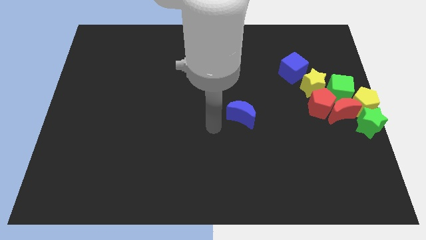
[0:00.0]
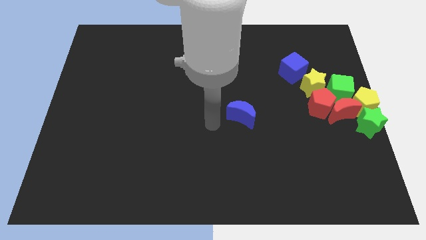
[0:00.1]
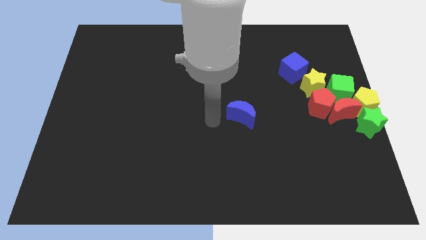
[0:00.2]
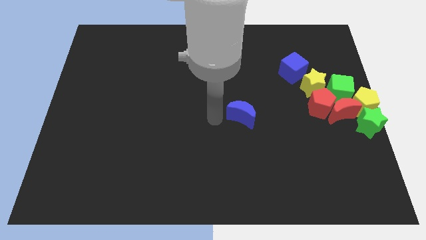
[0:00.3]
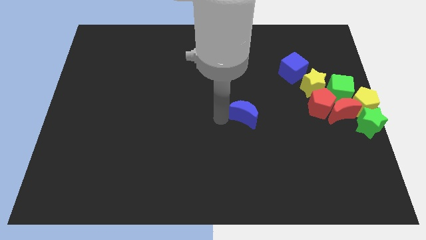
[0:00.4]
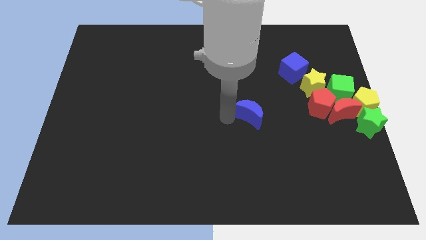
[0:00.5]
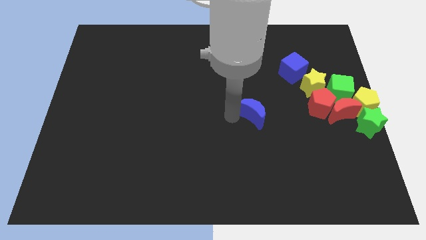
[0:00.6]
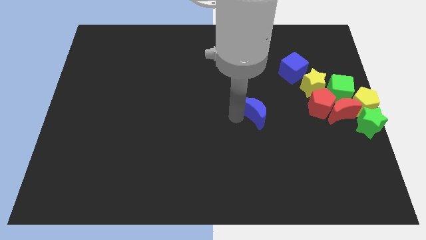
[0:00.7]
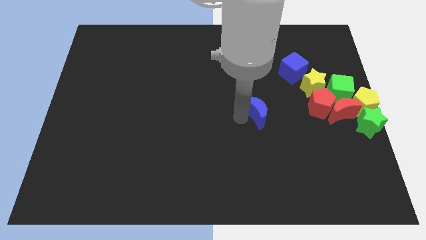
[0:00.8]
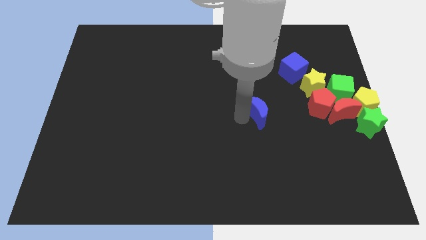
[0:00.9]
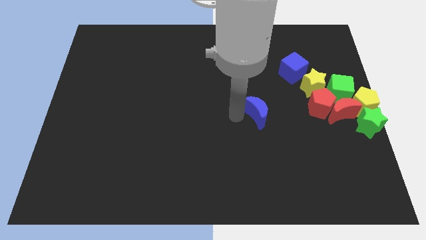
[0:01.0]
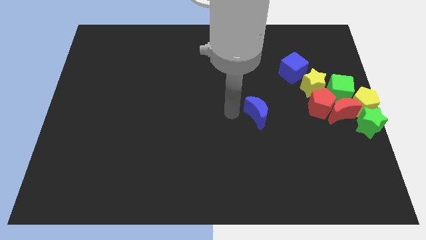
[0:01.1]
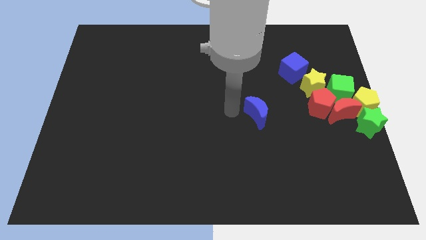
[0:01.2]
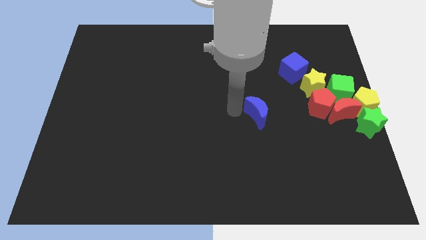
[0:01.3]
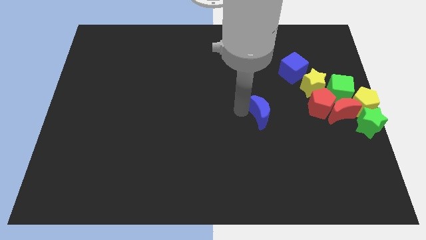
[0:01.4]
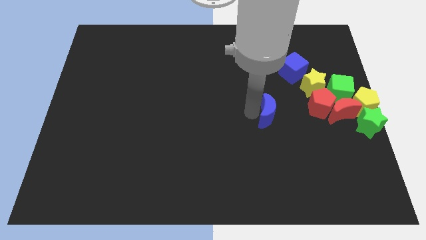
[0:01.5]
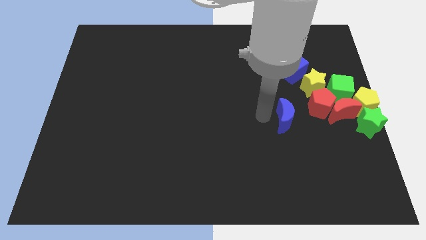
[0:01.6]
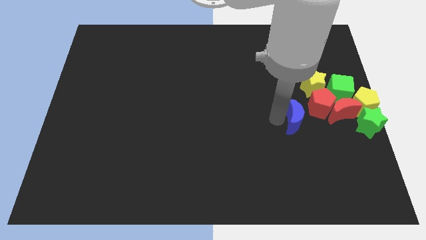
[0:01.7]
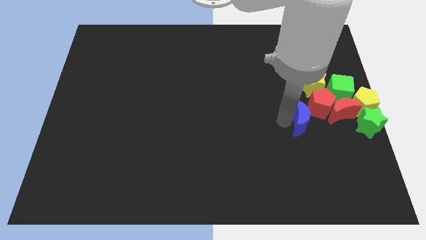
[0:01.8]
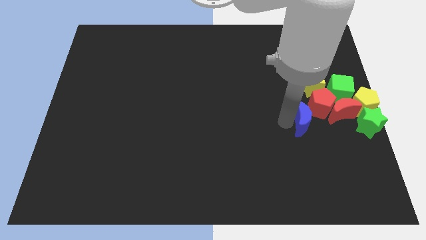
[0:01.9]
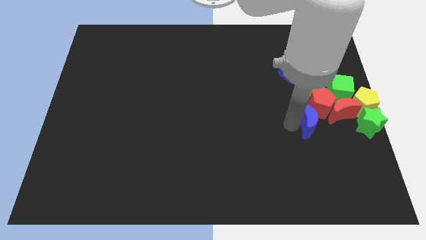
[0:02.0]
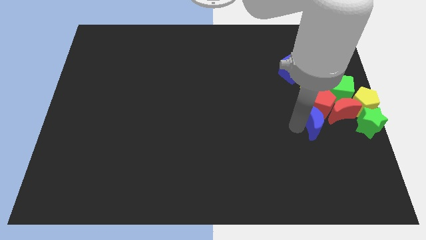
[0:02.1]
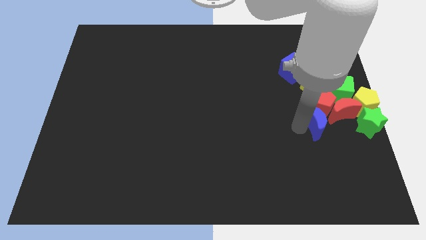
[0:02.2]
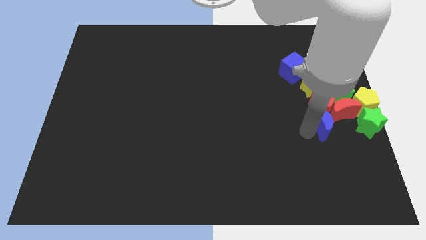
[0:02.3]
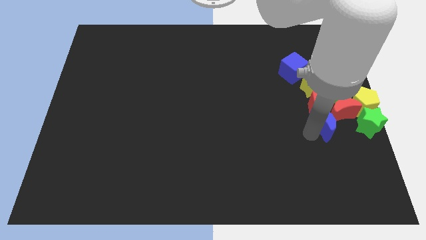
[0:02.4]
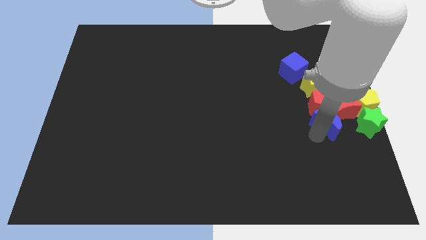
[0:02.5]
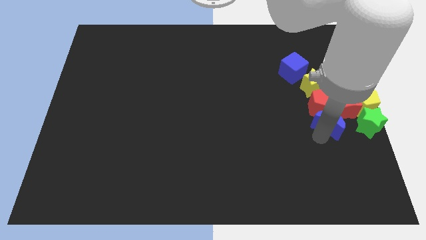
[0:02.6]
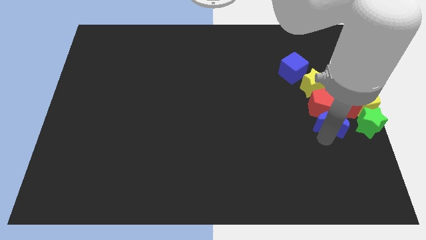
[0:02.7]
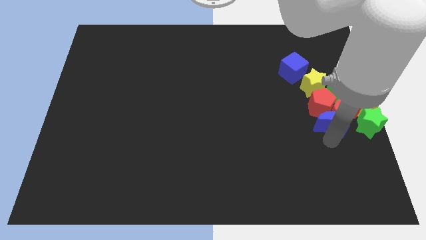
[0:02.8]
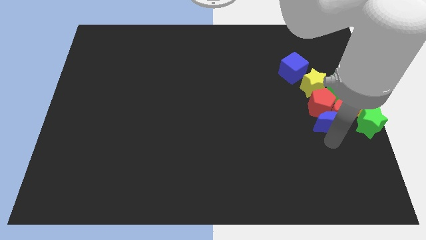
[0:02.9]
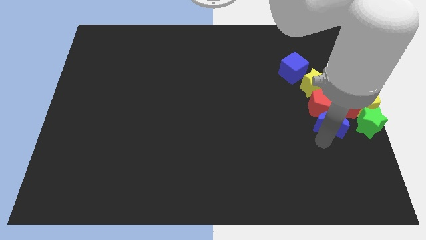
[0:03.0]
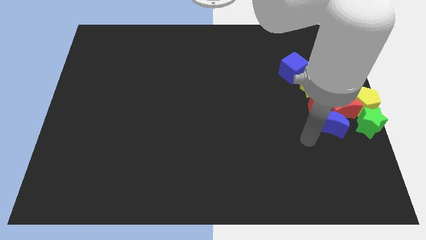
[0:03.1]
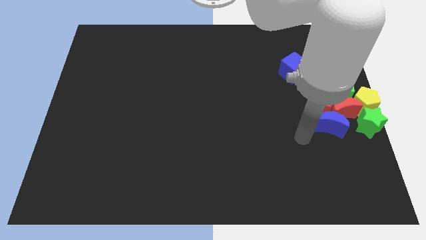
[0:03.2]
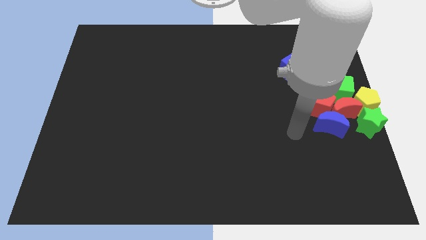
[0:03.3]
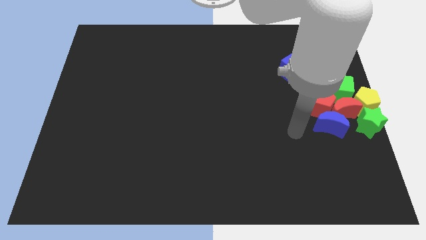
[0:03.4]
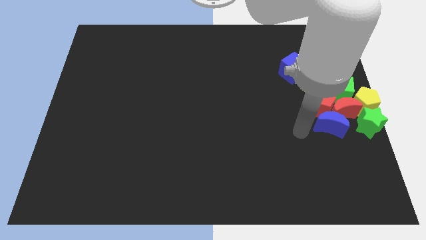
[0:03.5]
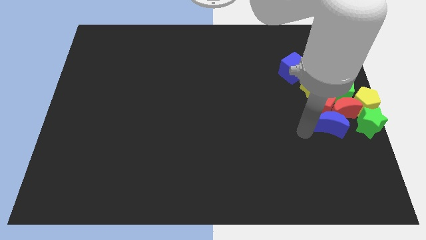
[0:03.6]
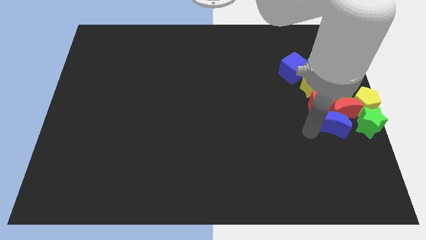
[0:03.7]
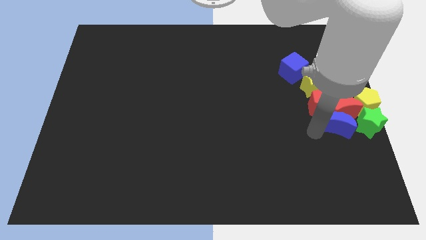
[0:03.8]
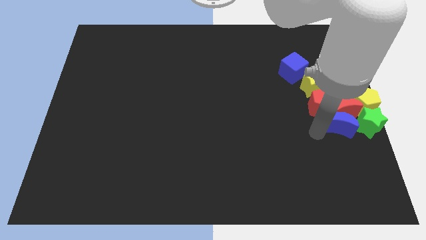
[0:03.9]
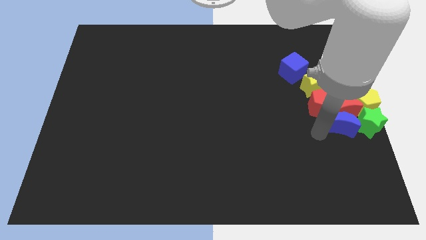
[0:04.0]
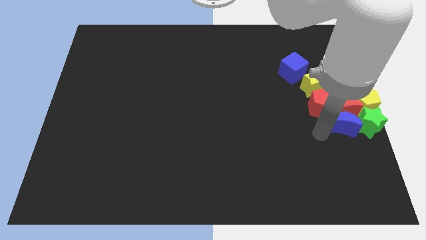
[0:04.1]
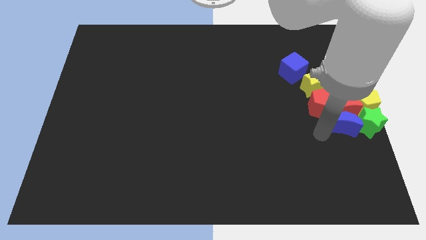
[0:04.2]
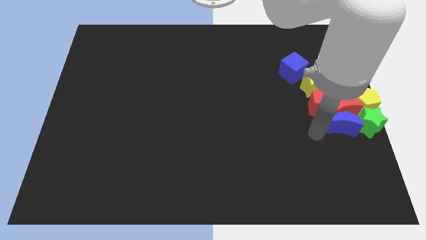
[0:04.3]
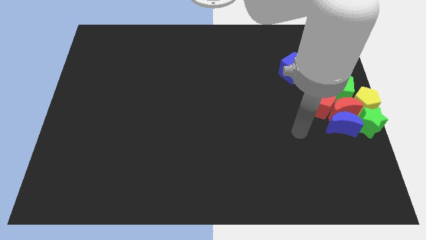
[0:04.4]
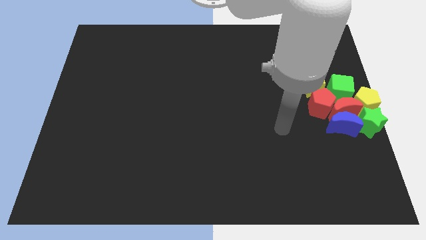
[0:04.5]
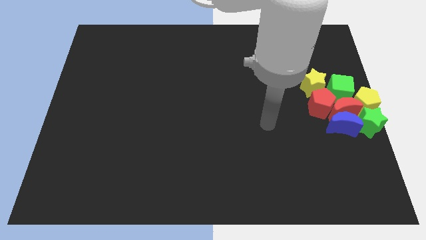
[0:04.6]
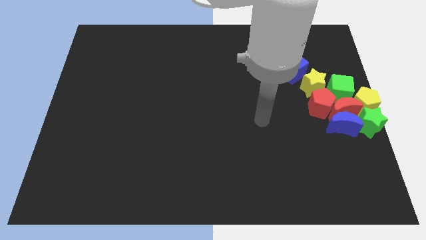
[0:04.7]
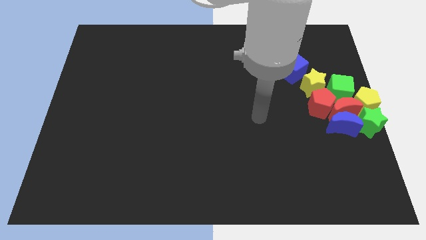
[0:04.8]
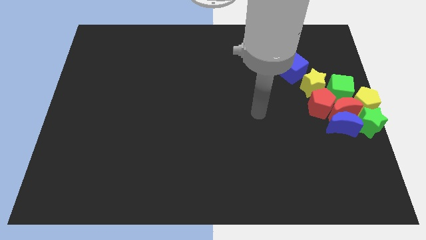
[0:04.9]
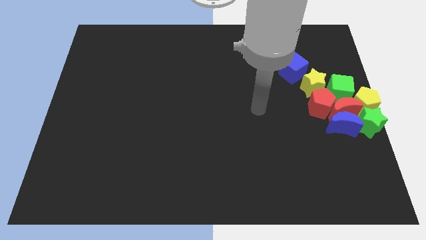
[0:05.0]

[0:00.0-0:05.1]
place the blue crescent to the bottom of red crescent

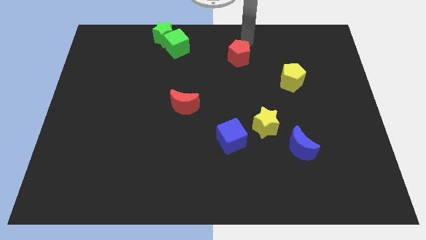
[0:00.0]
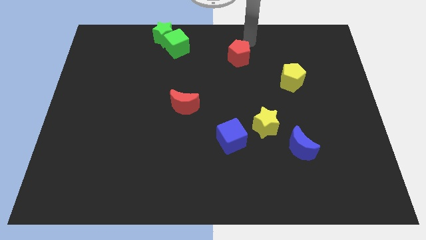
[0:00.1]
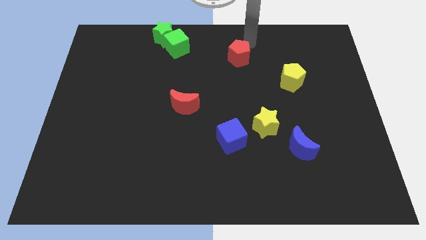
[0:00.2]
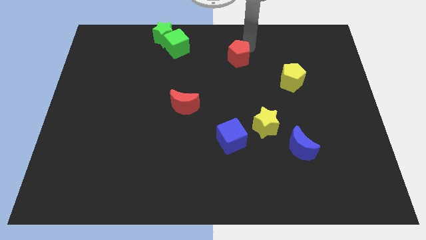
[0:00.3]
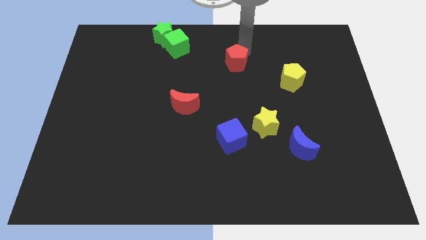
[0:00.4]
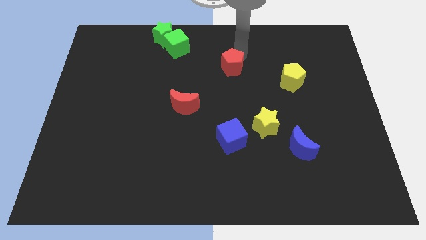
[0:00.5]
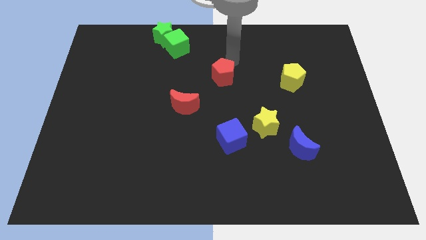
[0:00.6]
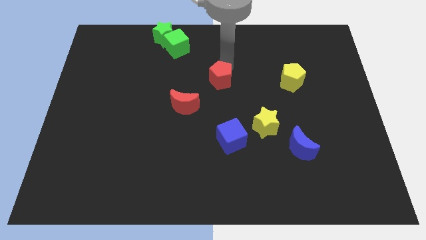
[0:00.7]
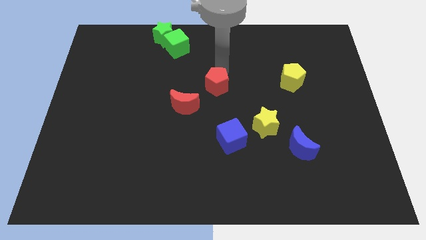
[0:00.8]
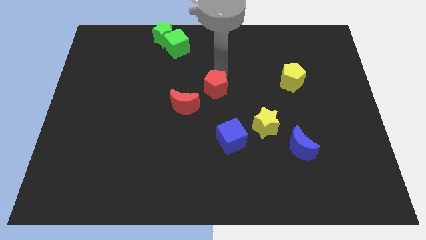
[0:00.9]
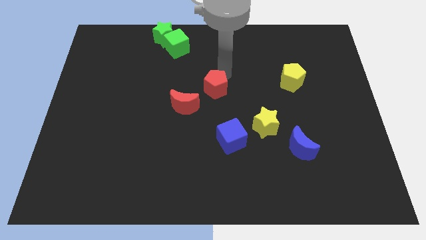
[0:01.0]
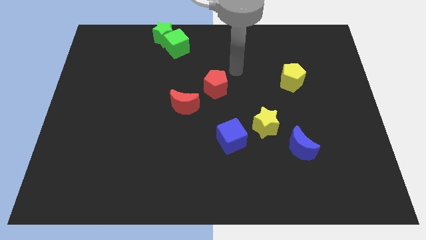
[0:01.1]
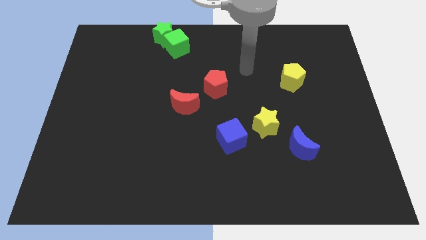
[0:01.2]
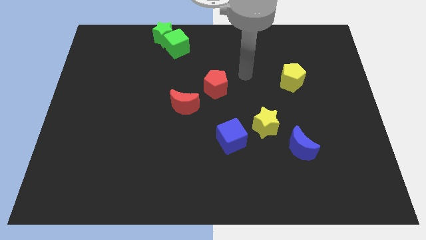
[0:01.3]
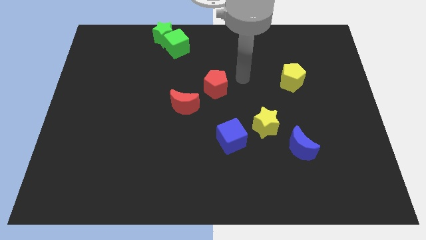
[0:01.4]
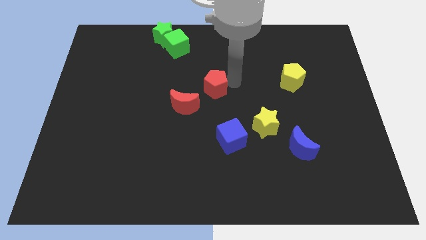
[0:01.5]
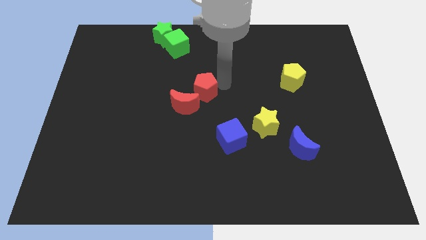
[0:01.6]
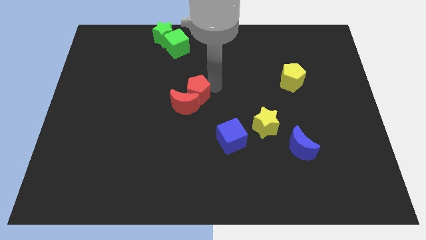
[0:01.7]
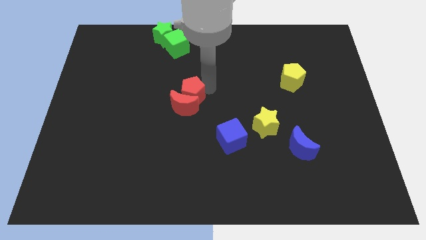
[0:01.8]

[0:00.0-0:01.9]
move the red pentagon into the red crescent

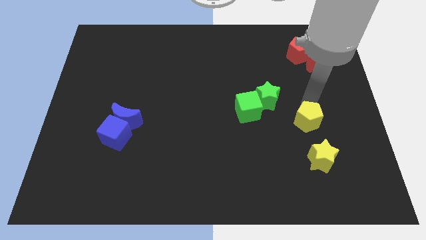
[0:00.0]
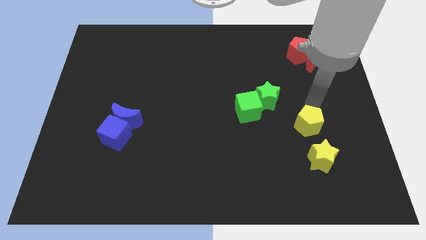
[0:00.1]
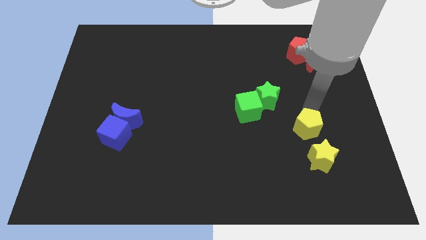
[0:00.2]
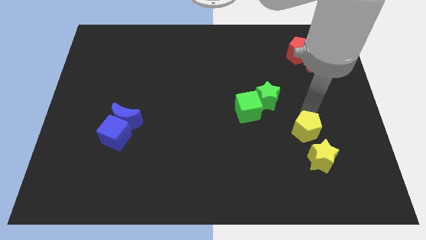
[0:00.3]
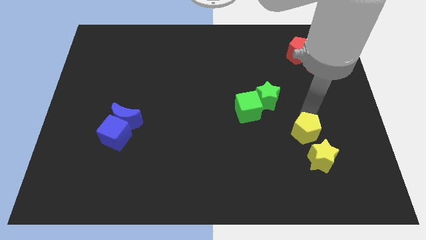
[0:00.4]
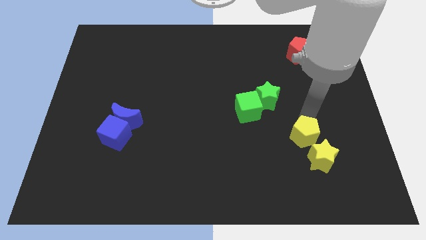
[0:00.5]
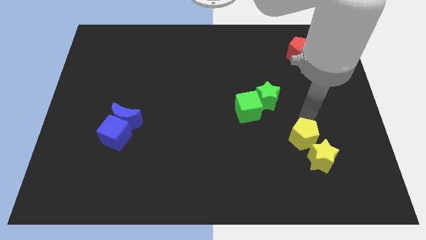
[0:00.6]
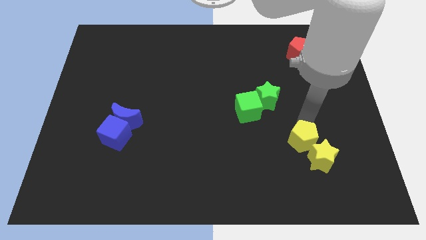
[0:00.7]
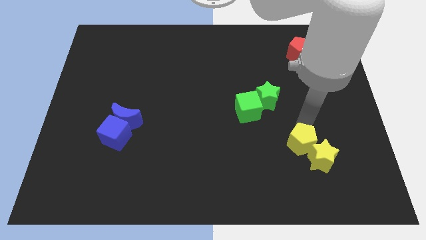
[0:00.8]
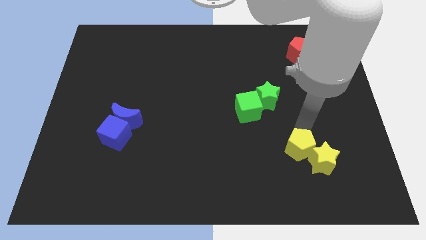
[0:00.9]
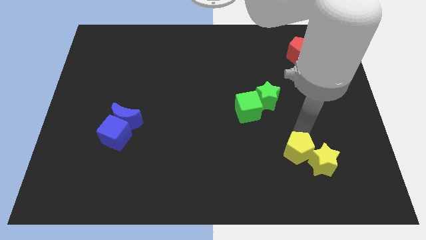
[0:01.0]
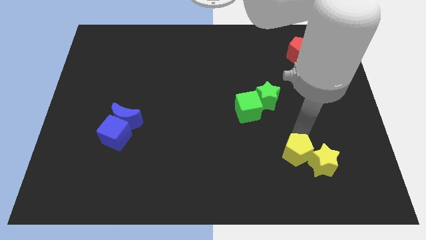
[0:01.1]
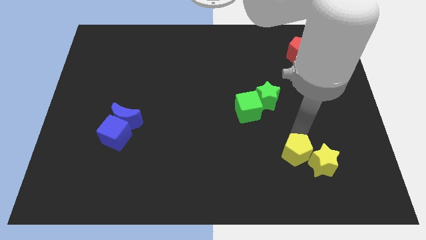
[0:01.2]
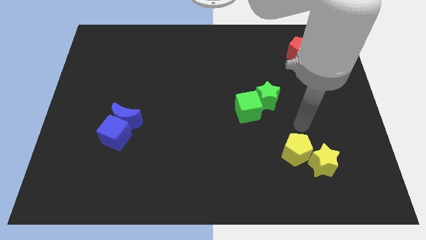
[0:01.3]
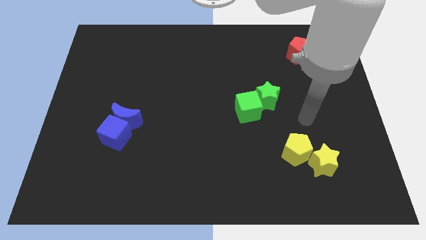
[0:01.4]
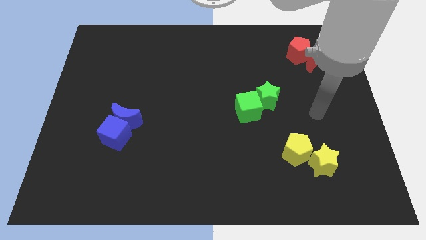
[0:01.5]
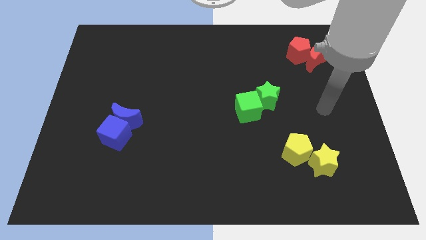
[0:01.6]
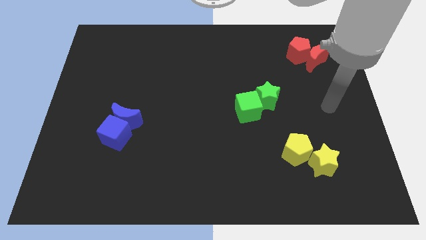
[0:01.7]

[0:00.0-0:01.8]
push the yellow pentagon into the yellow star
